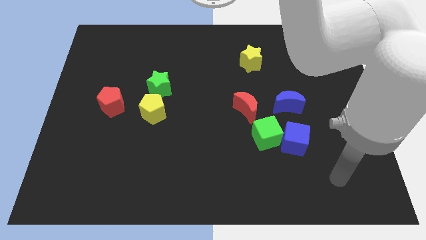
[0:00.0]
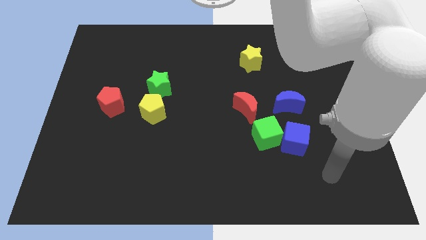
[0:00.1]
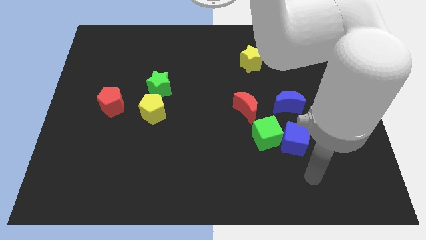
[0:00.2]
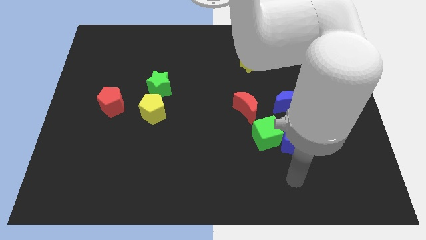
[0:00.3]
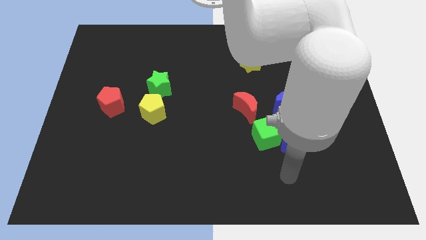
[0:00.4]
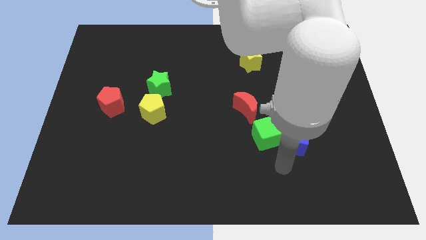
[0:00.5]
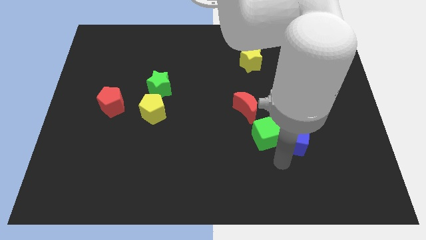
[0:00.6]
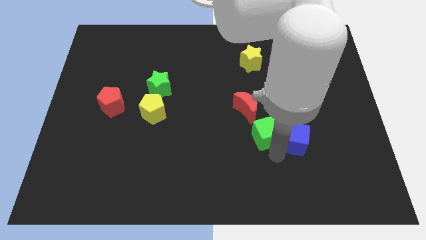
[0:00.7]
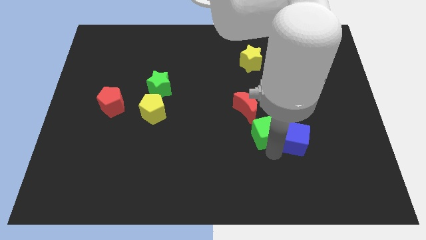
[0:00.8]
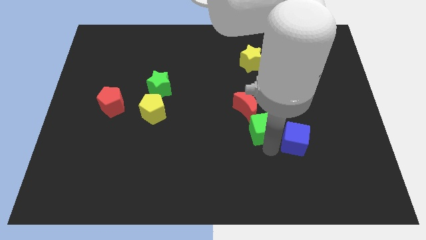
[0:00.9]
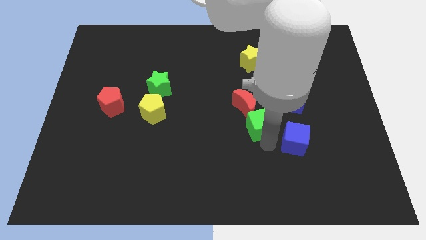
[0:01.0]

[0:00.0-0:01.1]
push the green cube slightly to the top

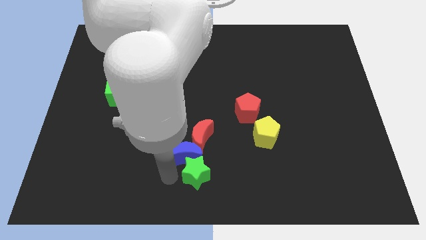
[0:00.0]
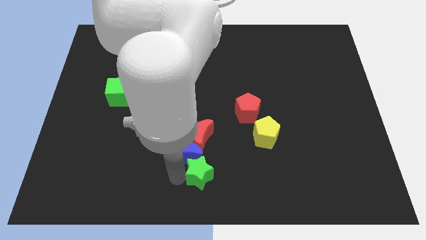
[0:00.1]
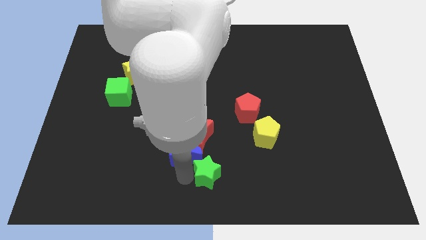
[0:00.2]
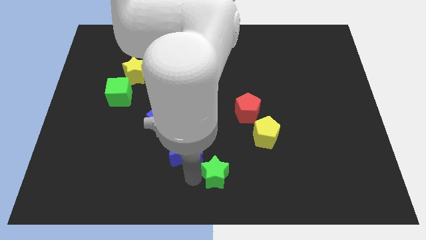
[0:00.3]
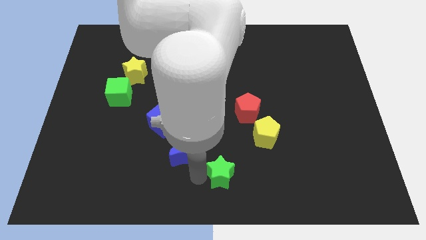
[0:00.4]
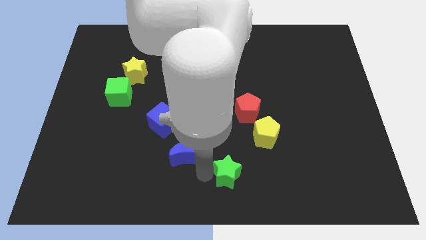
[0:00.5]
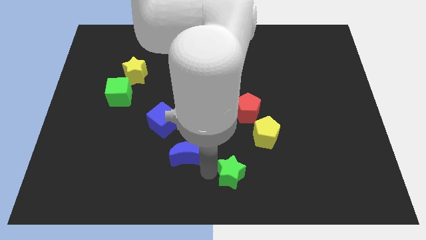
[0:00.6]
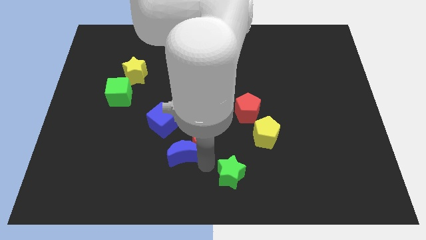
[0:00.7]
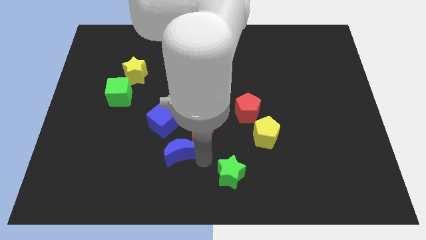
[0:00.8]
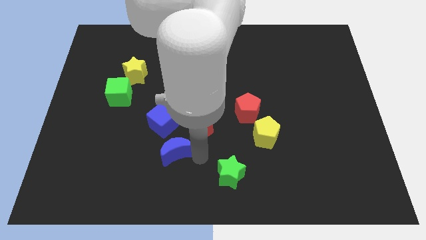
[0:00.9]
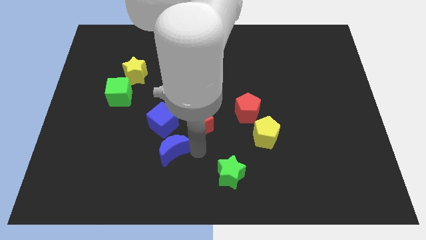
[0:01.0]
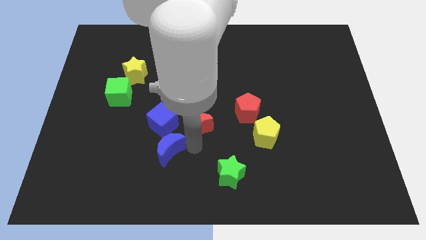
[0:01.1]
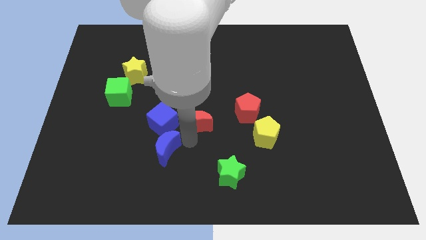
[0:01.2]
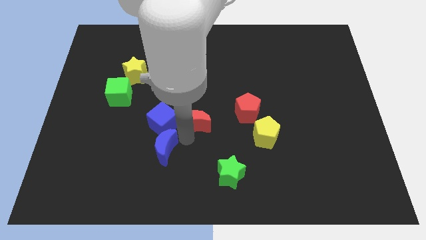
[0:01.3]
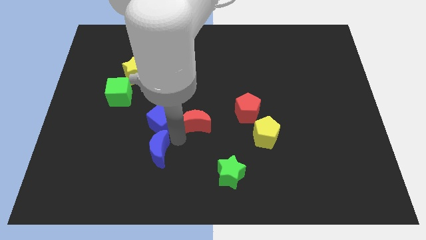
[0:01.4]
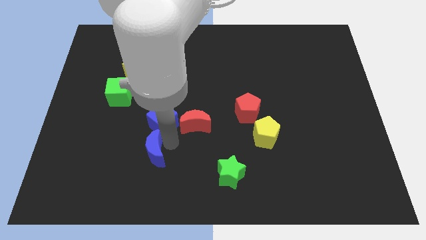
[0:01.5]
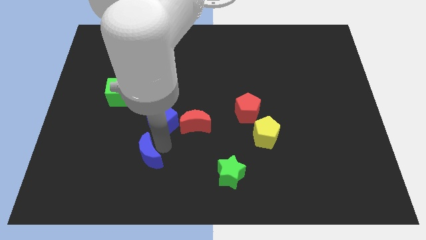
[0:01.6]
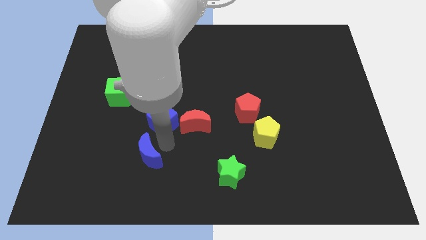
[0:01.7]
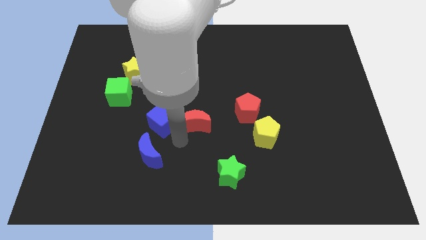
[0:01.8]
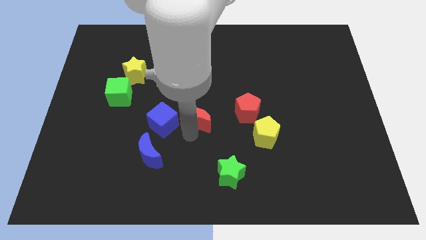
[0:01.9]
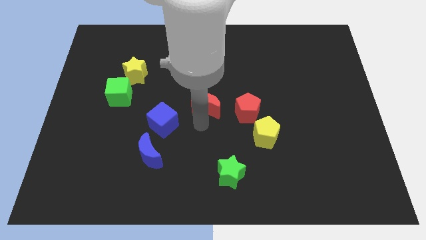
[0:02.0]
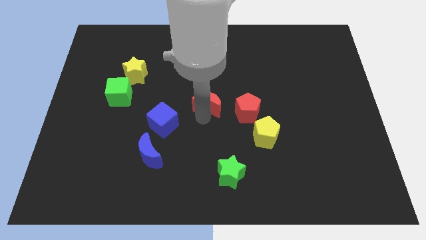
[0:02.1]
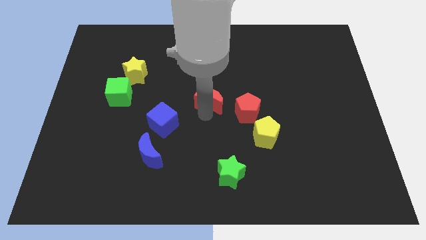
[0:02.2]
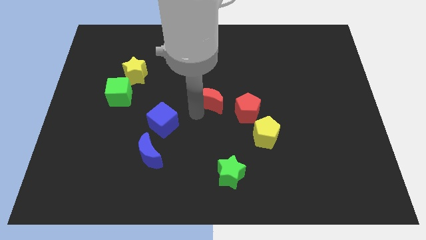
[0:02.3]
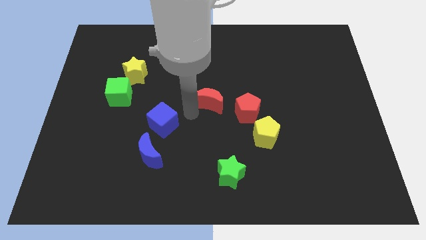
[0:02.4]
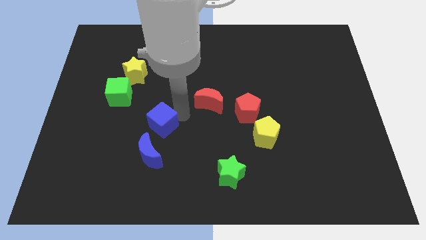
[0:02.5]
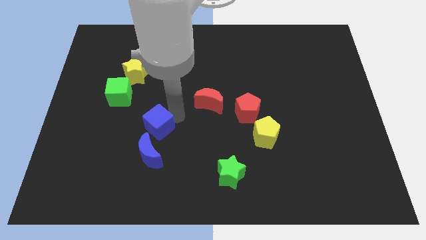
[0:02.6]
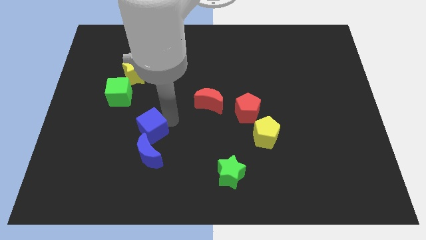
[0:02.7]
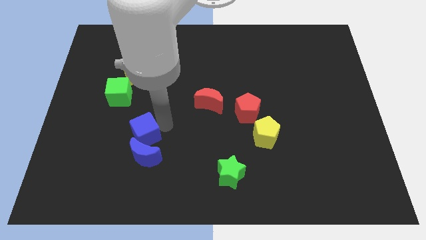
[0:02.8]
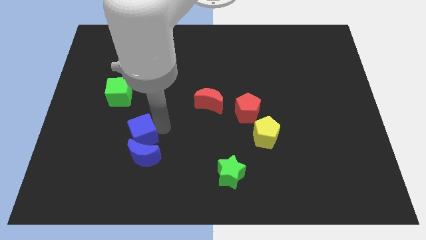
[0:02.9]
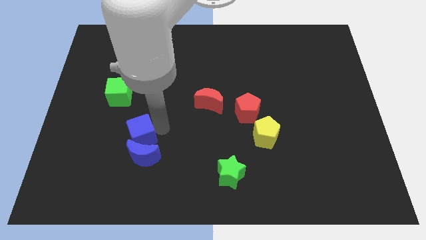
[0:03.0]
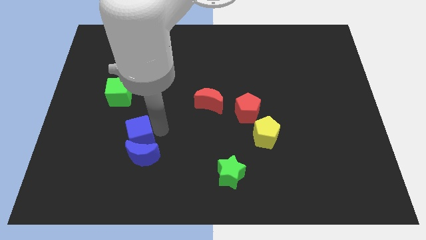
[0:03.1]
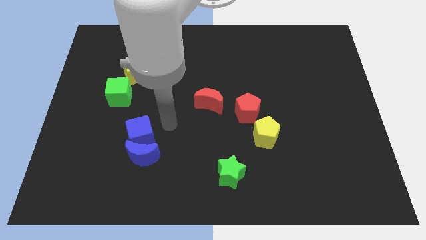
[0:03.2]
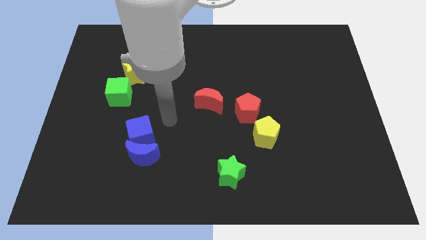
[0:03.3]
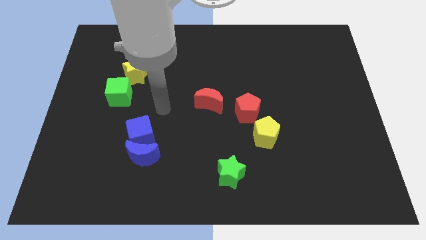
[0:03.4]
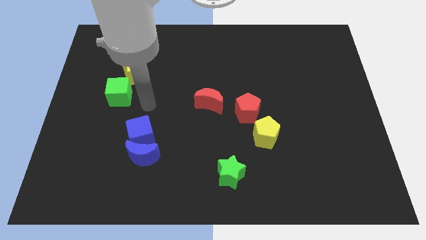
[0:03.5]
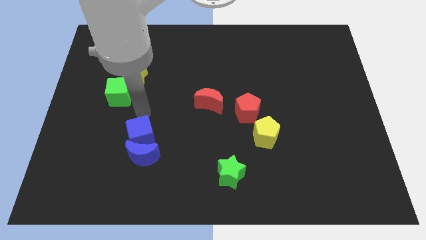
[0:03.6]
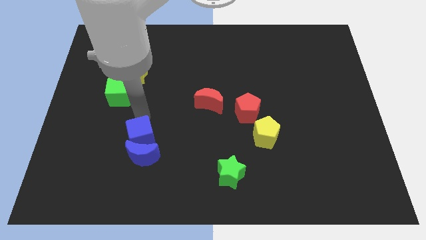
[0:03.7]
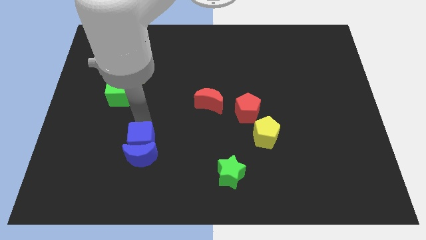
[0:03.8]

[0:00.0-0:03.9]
separate the blue crescent and red crescent by moving the blue crescent towards the bottom of the blue cube

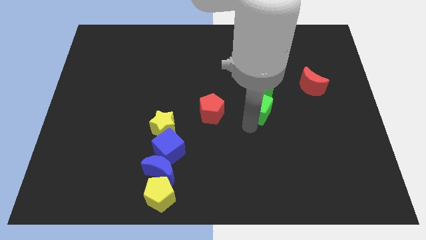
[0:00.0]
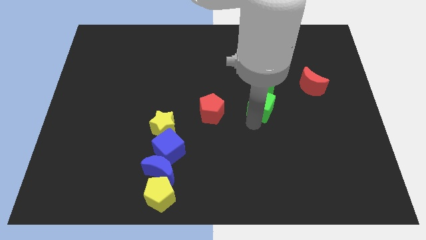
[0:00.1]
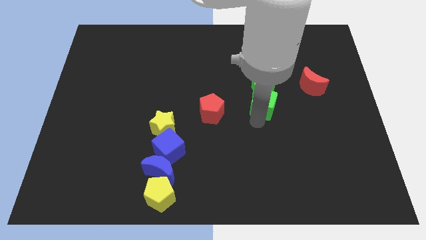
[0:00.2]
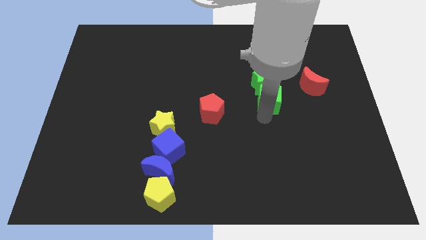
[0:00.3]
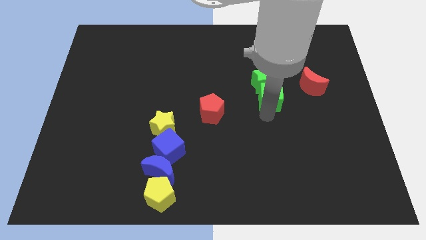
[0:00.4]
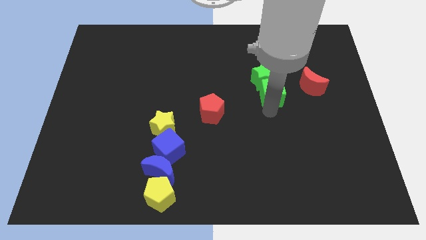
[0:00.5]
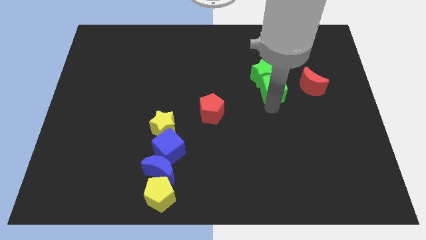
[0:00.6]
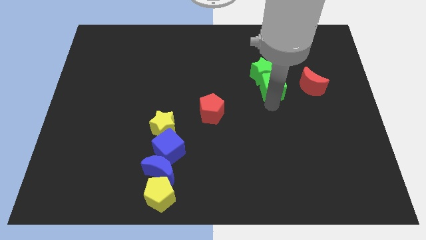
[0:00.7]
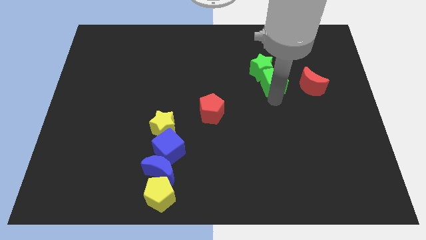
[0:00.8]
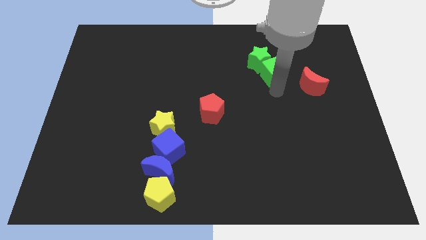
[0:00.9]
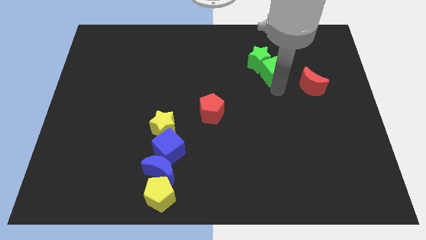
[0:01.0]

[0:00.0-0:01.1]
push the green things towards the top side of the board

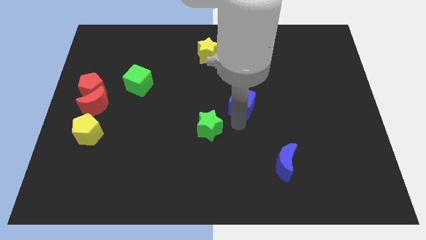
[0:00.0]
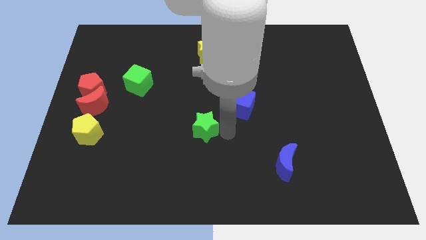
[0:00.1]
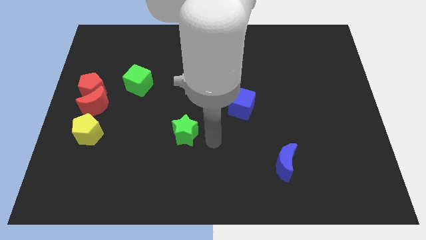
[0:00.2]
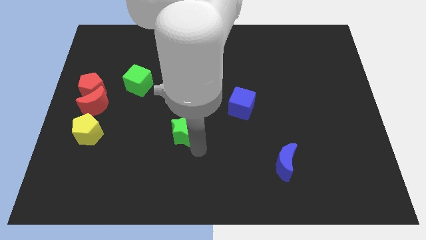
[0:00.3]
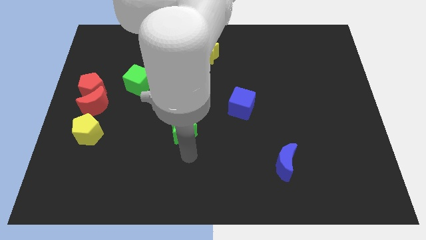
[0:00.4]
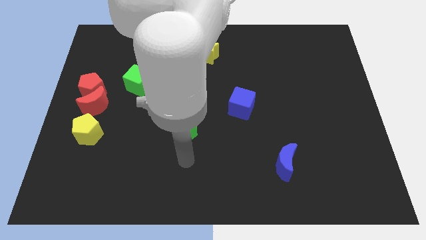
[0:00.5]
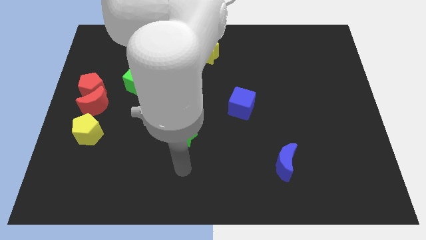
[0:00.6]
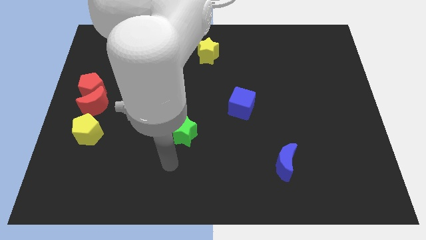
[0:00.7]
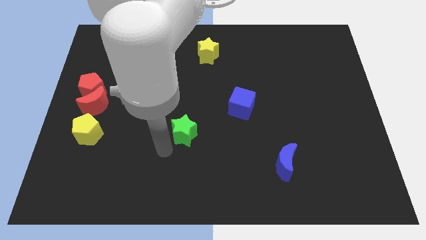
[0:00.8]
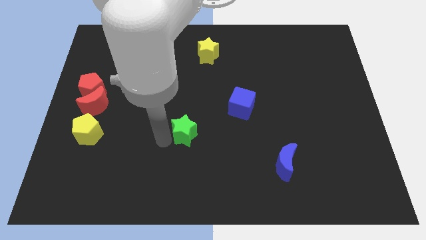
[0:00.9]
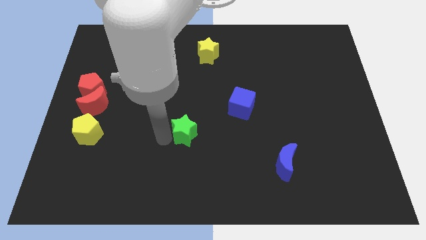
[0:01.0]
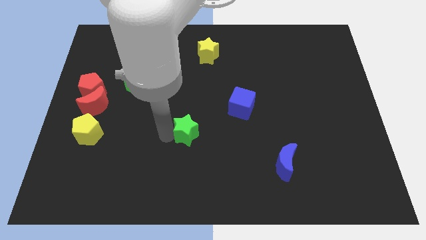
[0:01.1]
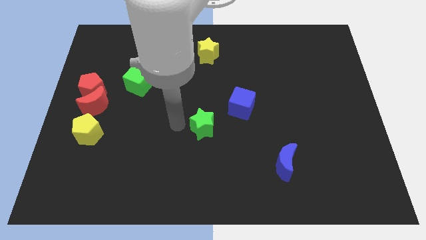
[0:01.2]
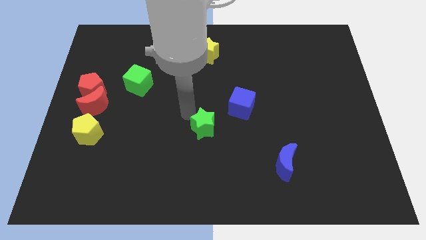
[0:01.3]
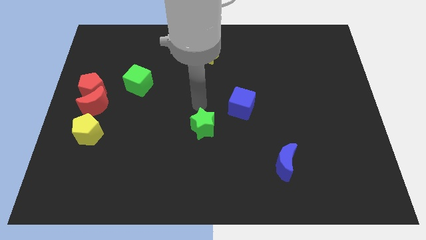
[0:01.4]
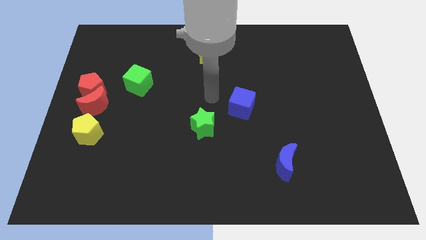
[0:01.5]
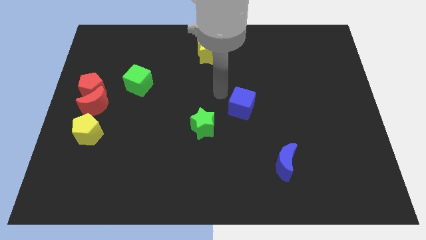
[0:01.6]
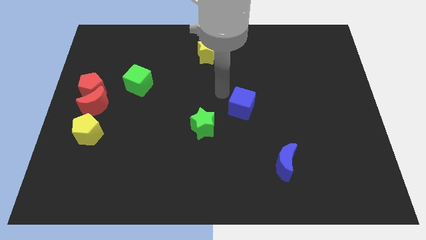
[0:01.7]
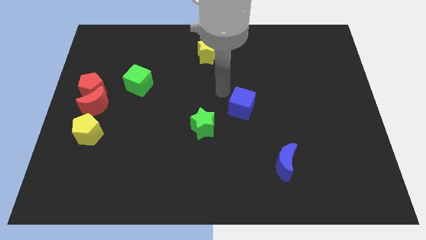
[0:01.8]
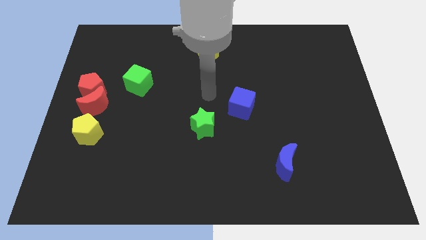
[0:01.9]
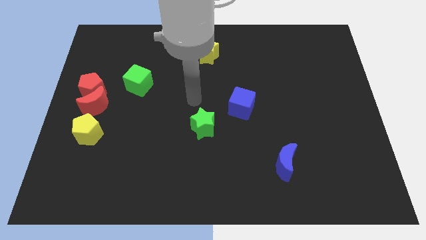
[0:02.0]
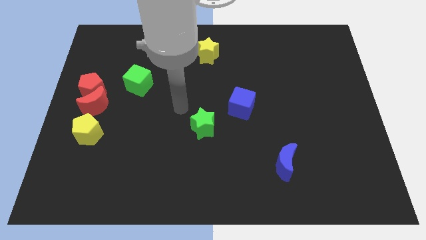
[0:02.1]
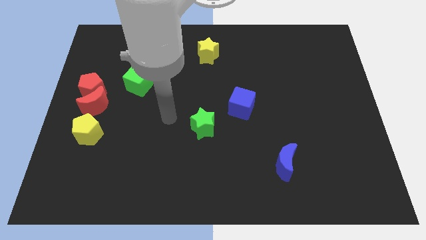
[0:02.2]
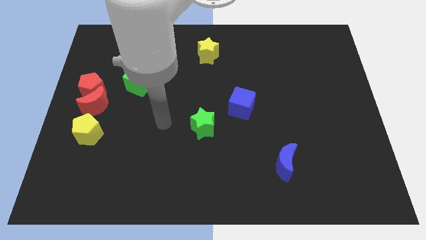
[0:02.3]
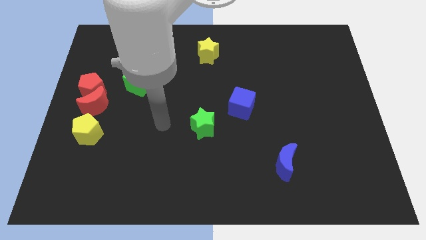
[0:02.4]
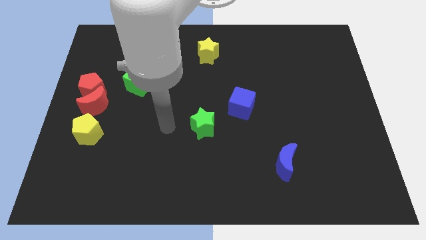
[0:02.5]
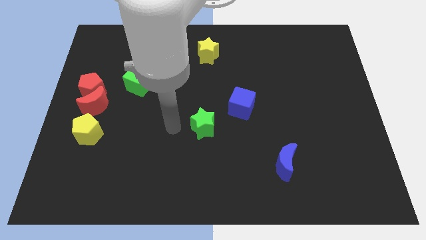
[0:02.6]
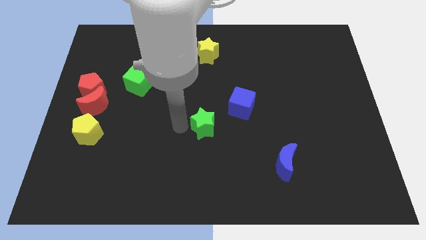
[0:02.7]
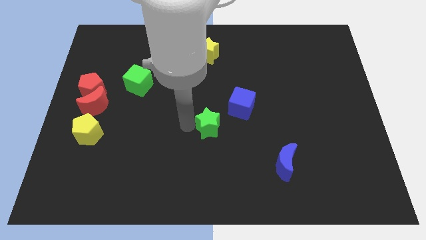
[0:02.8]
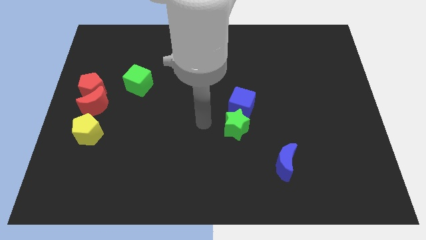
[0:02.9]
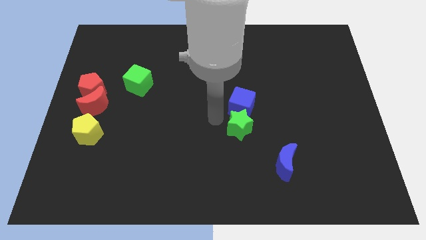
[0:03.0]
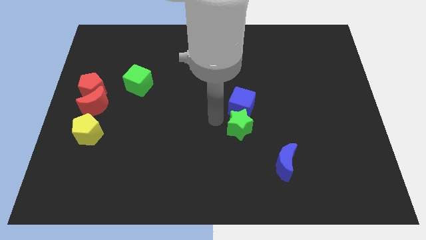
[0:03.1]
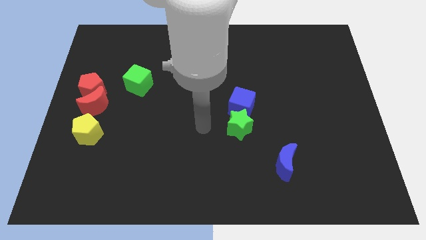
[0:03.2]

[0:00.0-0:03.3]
reposition the green star towards backside of the blue cube
